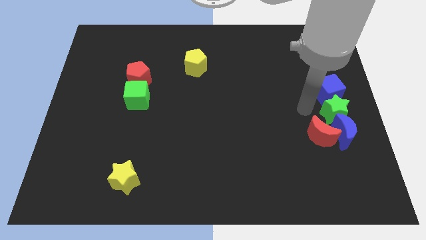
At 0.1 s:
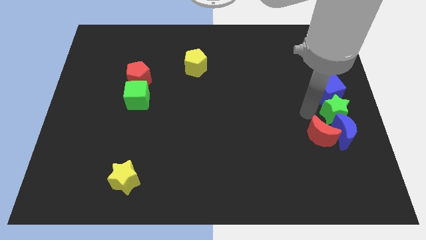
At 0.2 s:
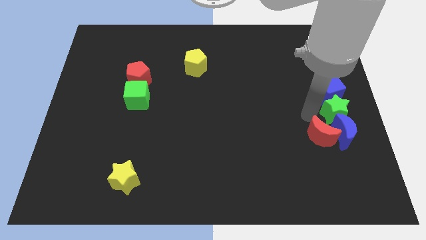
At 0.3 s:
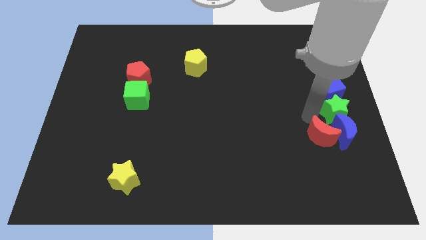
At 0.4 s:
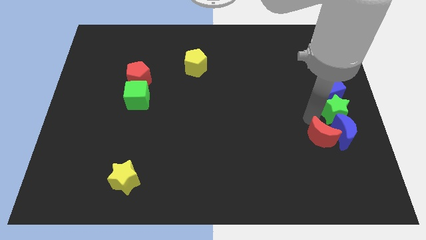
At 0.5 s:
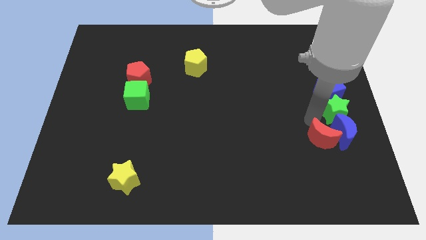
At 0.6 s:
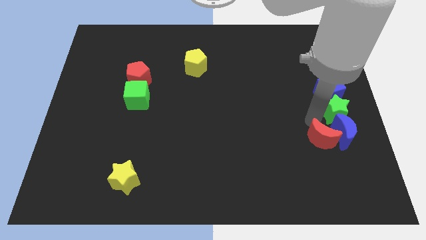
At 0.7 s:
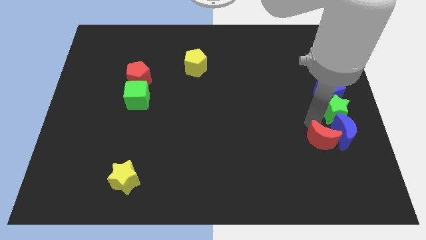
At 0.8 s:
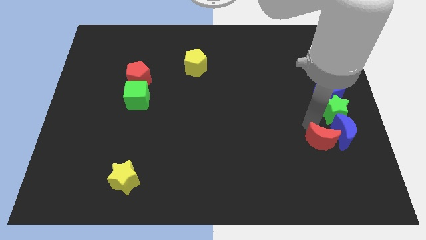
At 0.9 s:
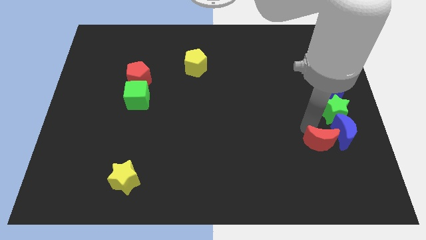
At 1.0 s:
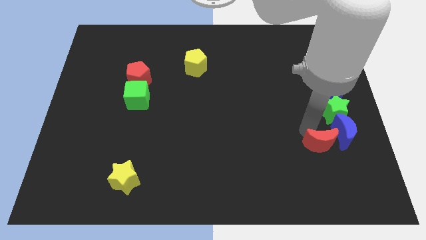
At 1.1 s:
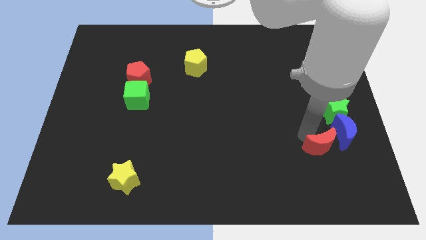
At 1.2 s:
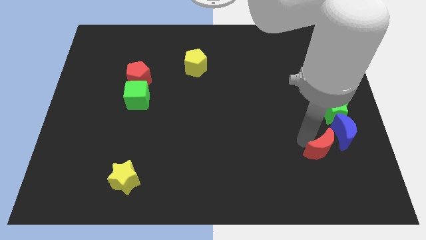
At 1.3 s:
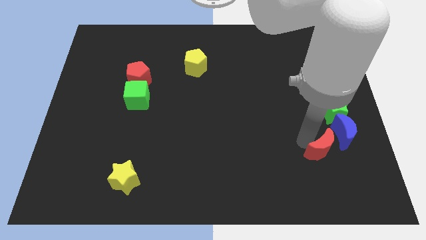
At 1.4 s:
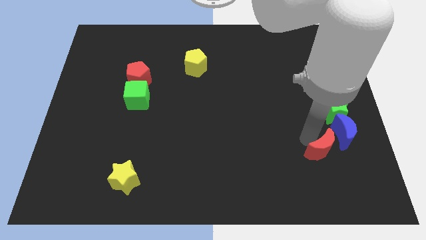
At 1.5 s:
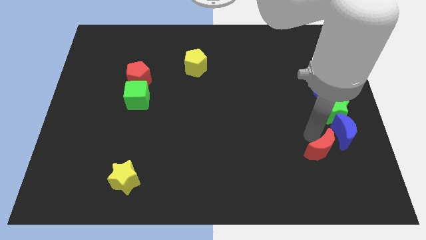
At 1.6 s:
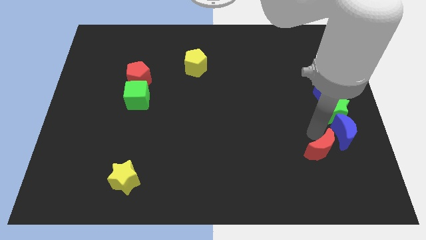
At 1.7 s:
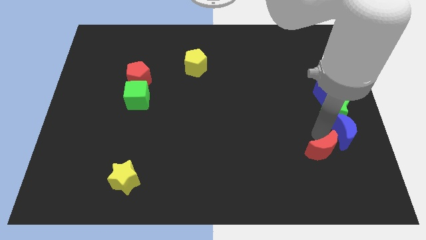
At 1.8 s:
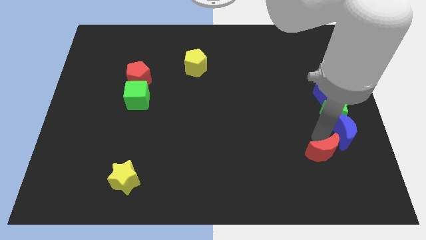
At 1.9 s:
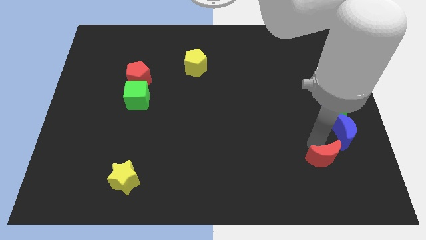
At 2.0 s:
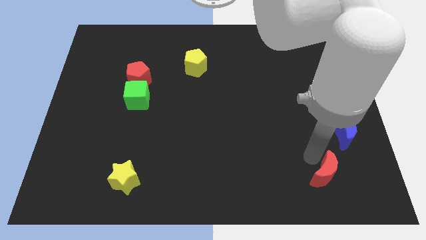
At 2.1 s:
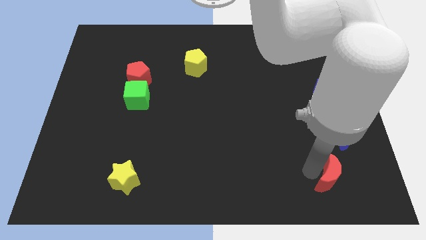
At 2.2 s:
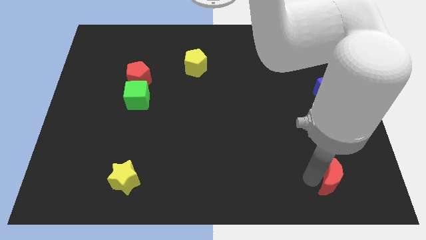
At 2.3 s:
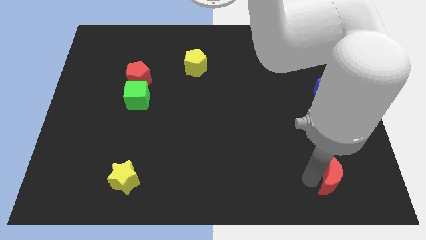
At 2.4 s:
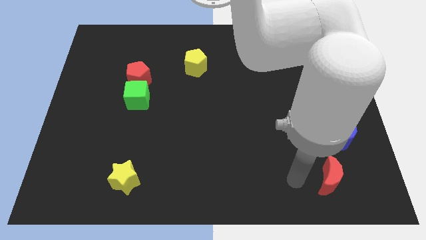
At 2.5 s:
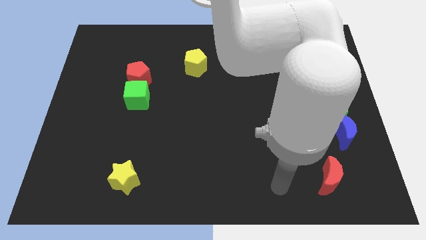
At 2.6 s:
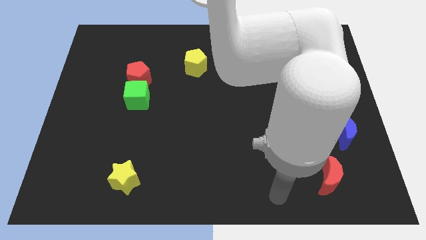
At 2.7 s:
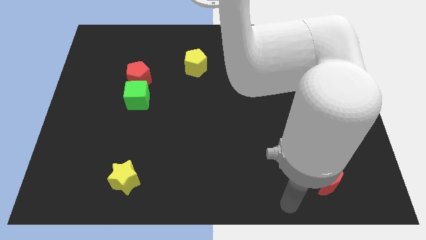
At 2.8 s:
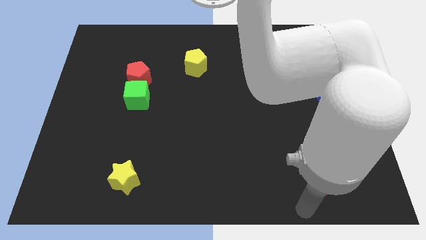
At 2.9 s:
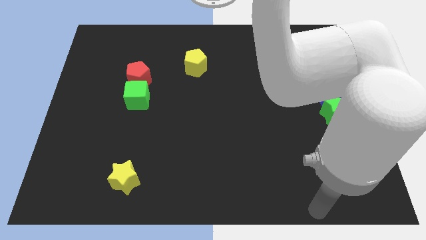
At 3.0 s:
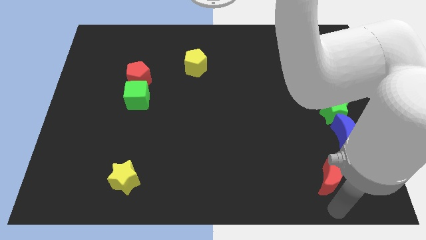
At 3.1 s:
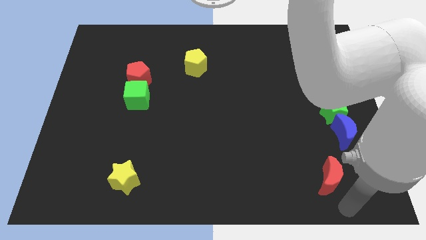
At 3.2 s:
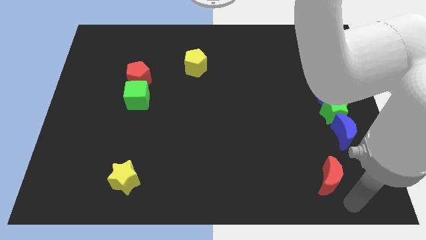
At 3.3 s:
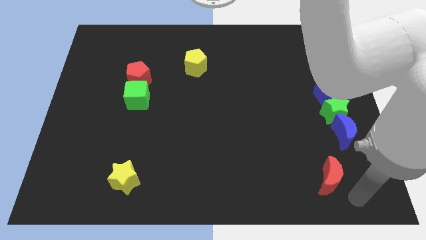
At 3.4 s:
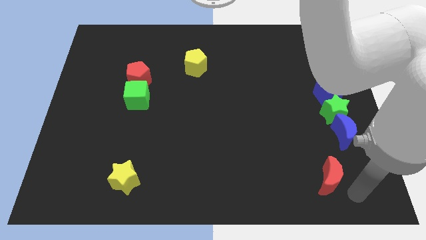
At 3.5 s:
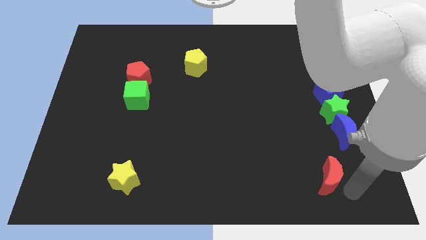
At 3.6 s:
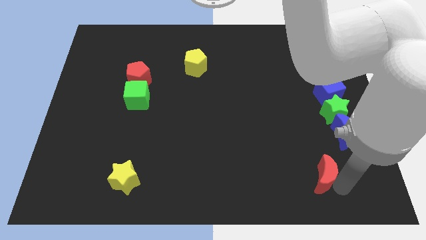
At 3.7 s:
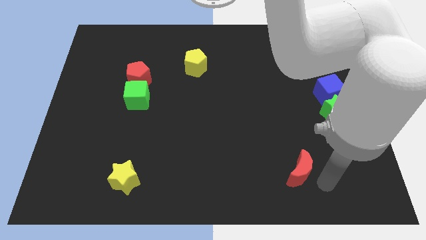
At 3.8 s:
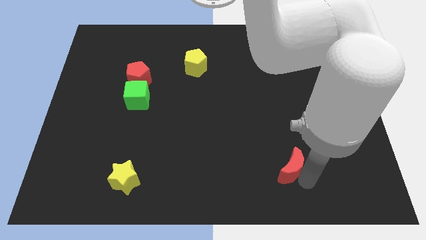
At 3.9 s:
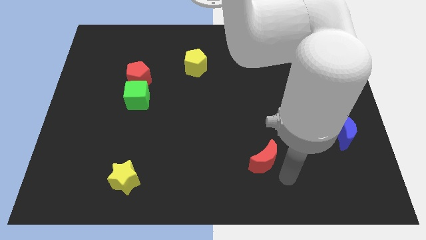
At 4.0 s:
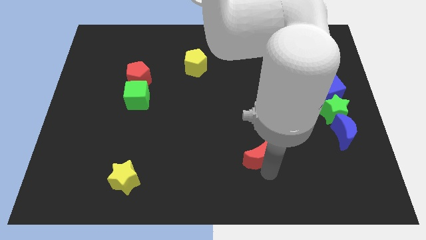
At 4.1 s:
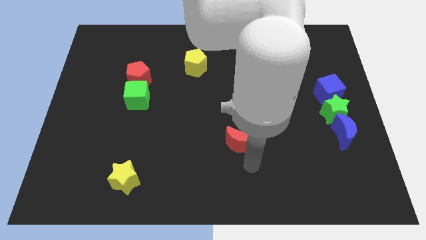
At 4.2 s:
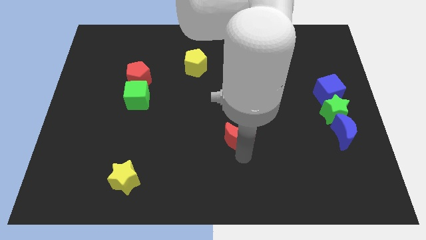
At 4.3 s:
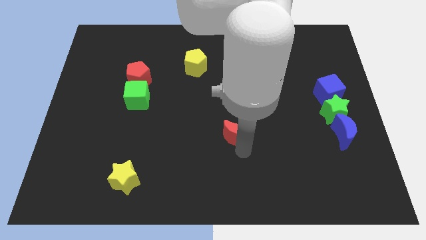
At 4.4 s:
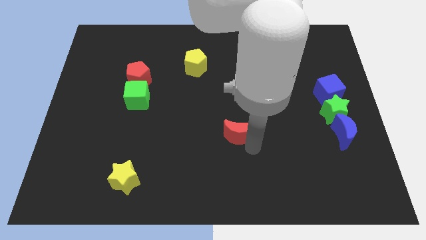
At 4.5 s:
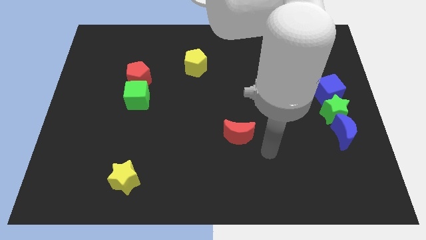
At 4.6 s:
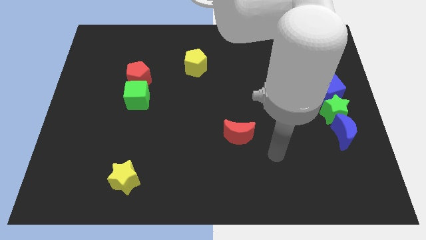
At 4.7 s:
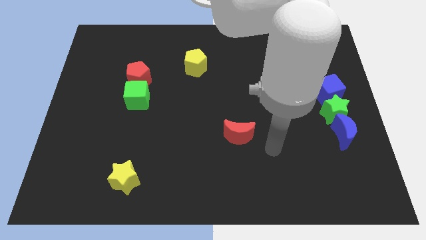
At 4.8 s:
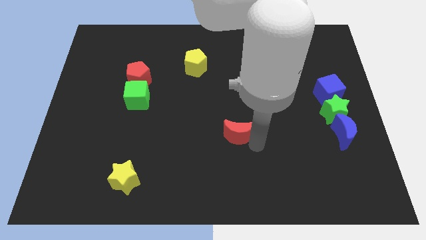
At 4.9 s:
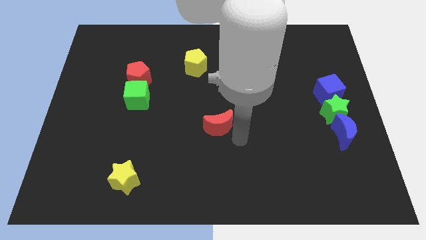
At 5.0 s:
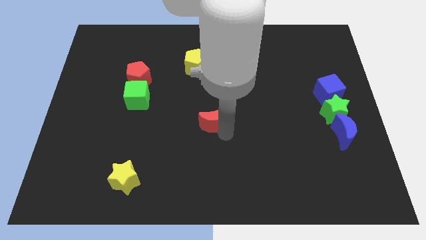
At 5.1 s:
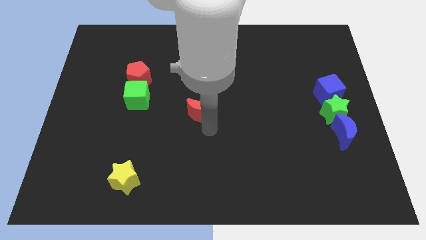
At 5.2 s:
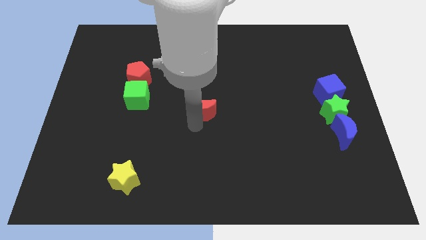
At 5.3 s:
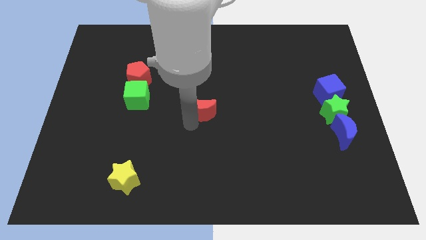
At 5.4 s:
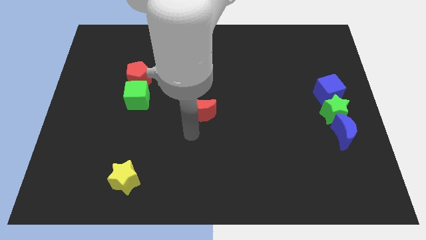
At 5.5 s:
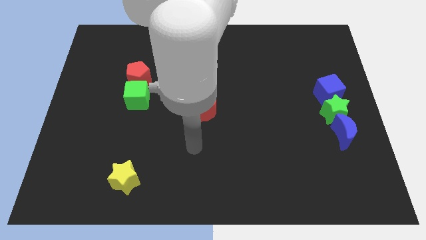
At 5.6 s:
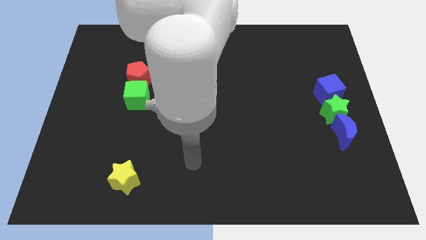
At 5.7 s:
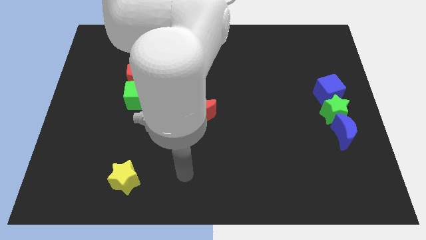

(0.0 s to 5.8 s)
separate the red crescent from the blue blocks and the green star

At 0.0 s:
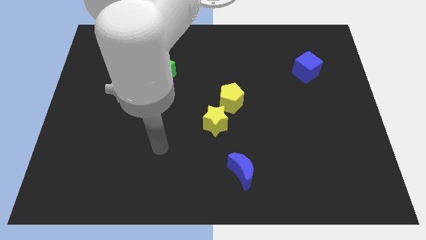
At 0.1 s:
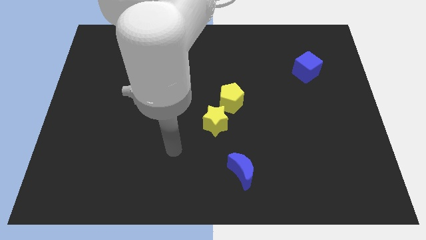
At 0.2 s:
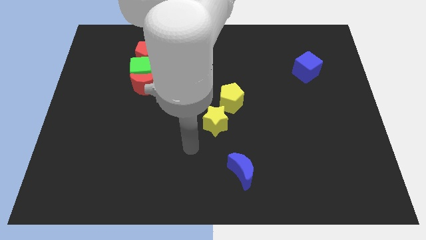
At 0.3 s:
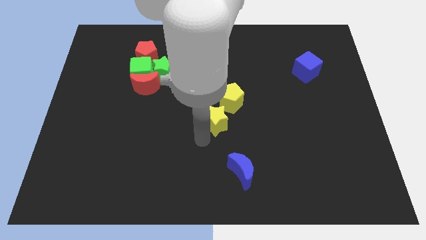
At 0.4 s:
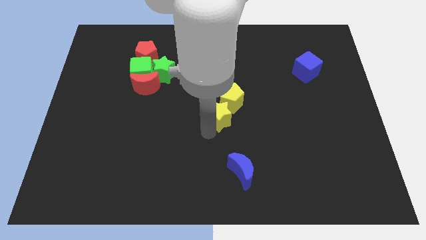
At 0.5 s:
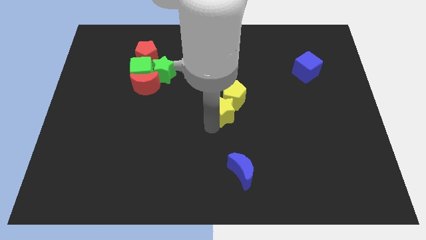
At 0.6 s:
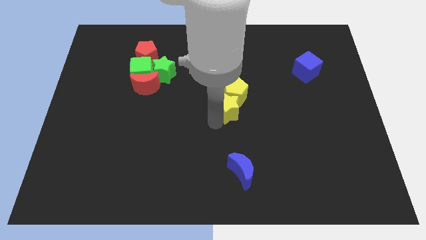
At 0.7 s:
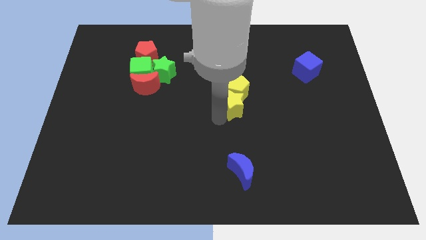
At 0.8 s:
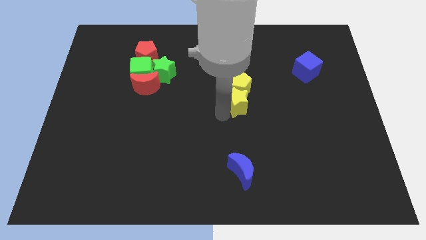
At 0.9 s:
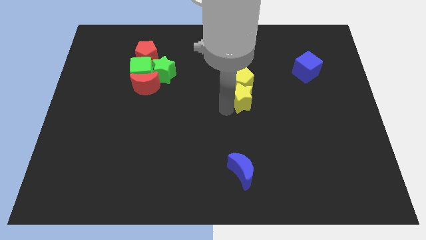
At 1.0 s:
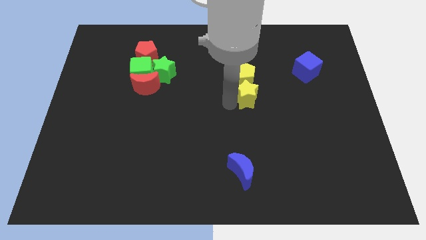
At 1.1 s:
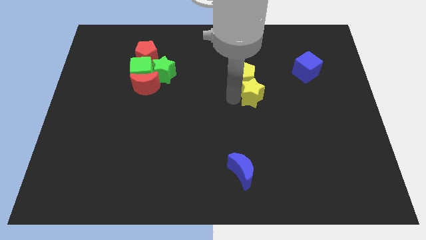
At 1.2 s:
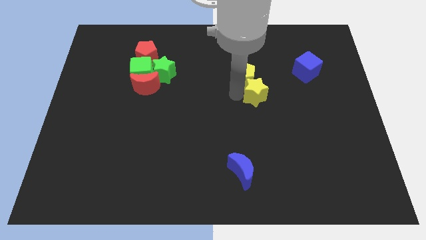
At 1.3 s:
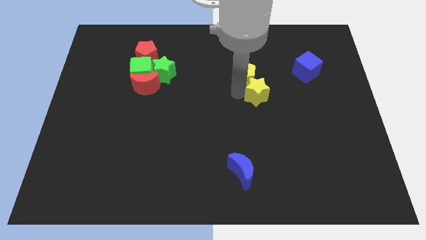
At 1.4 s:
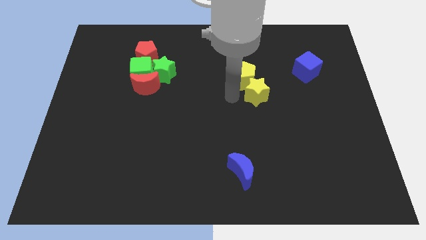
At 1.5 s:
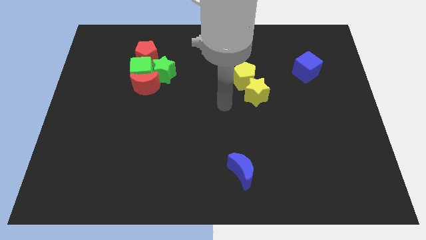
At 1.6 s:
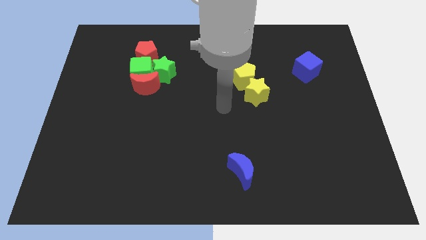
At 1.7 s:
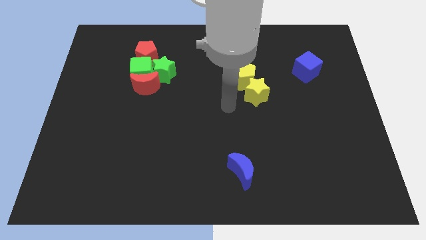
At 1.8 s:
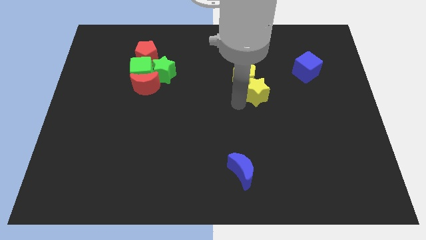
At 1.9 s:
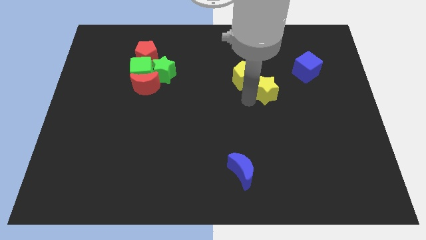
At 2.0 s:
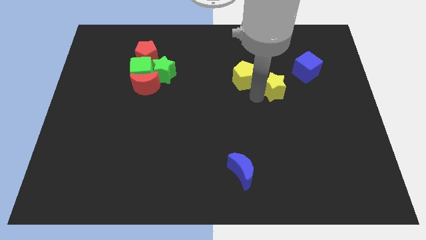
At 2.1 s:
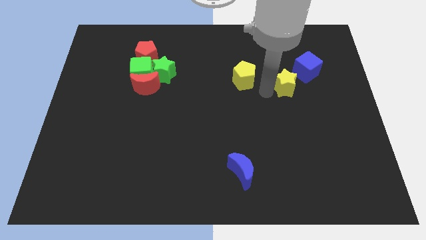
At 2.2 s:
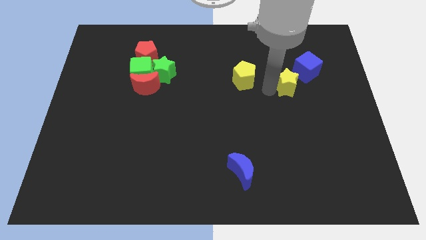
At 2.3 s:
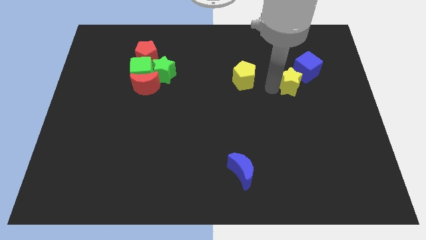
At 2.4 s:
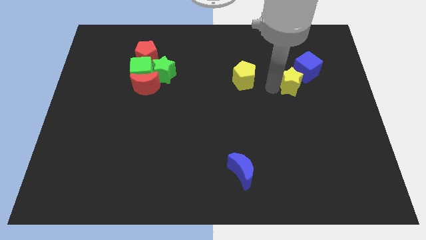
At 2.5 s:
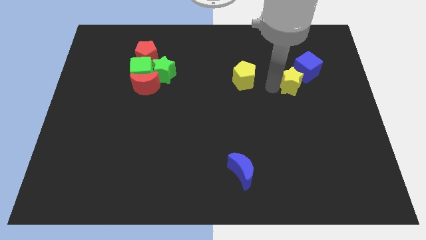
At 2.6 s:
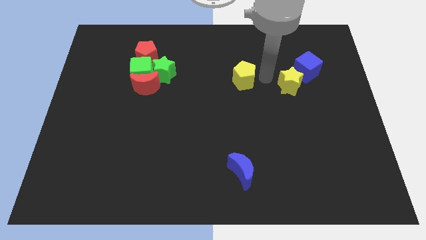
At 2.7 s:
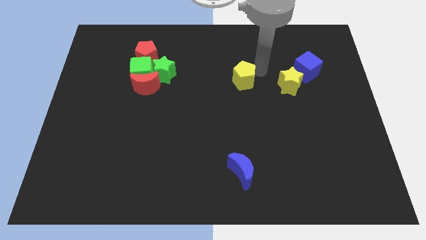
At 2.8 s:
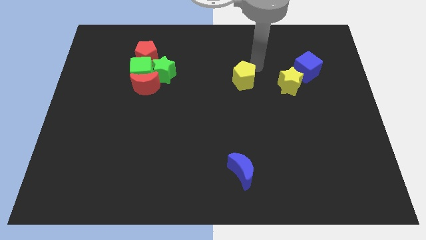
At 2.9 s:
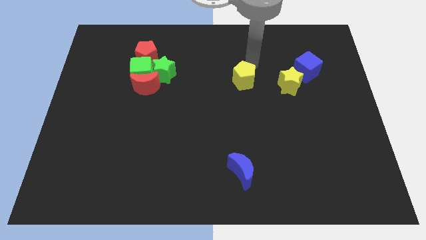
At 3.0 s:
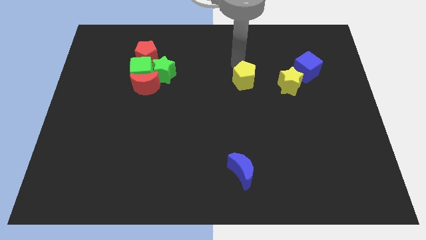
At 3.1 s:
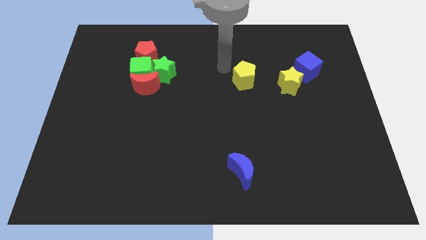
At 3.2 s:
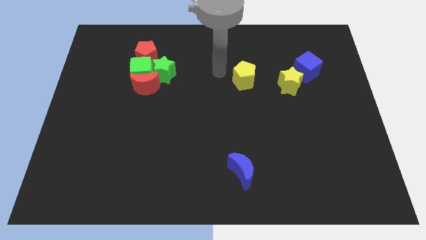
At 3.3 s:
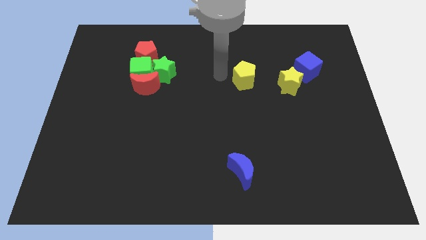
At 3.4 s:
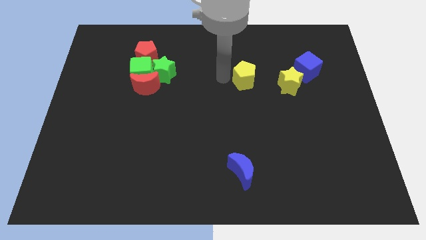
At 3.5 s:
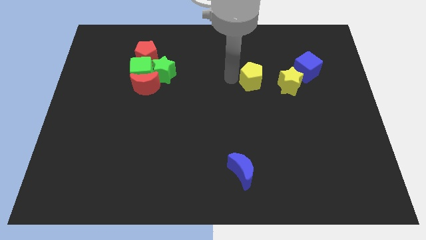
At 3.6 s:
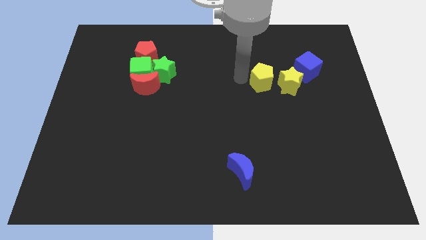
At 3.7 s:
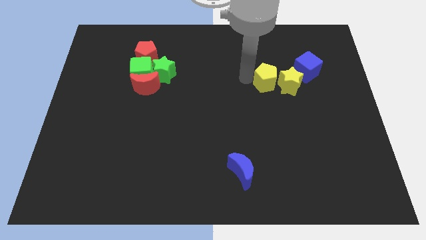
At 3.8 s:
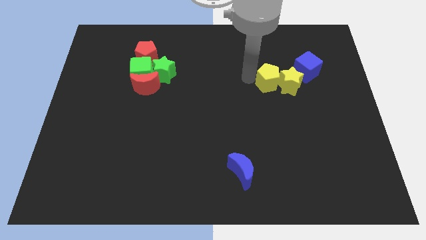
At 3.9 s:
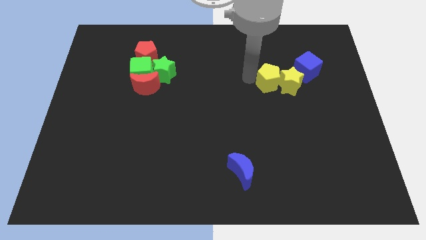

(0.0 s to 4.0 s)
move the yellow blocks to the left of blue cube
